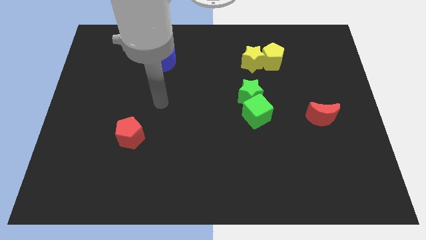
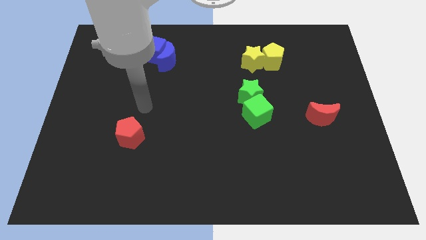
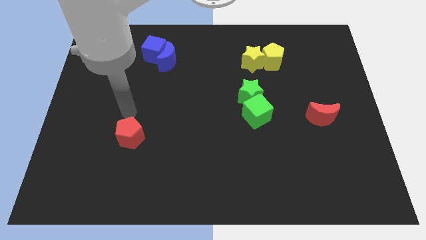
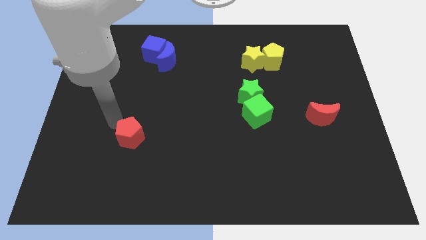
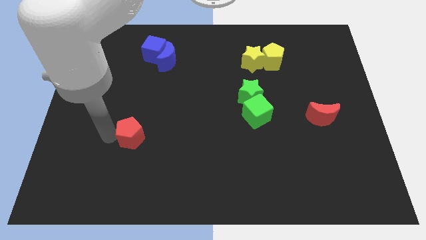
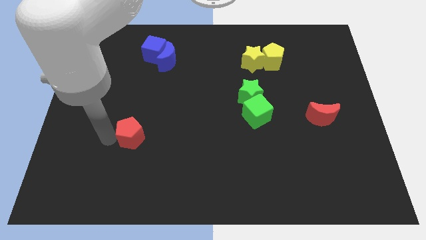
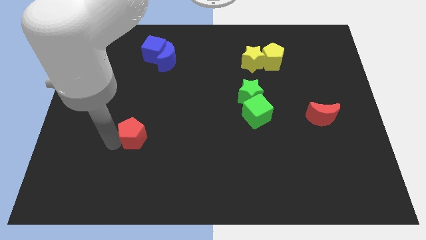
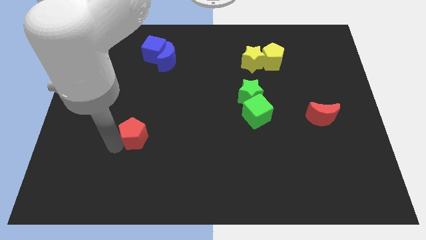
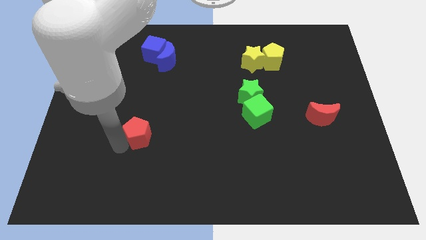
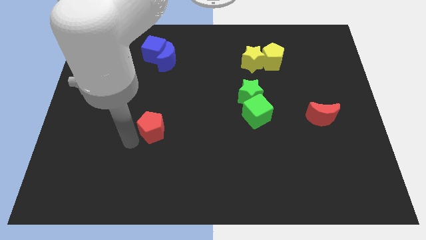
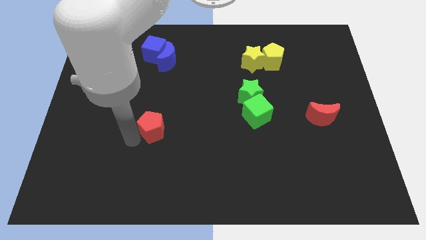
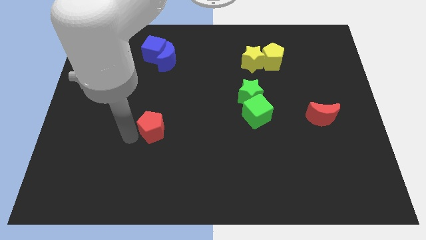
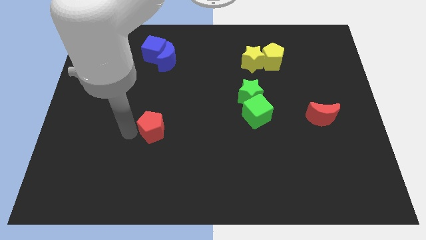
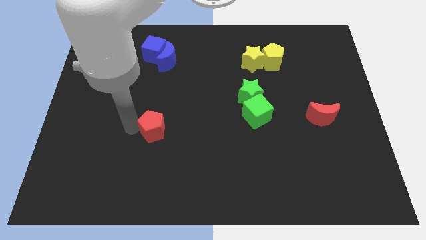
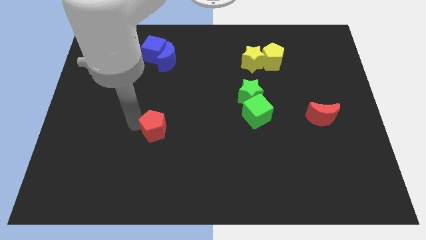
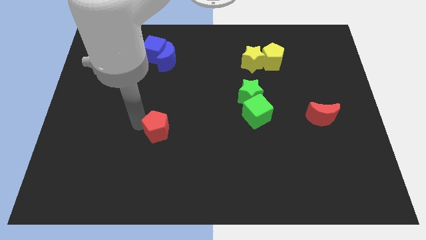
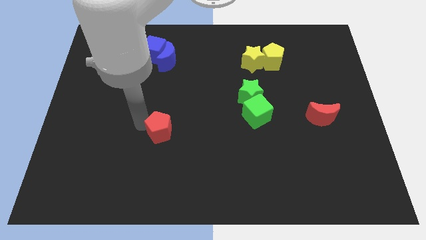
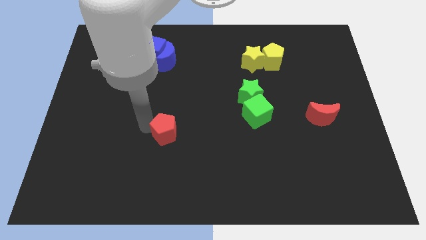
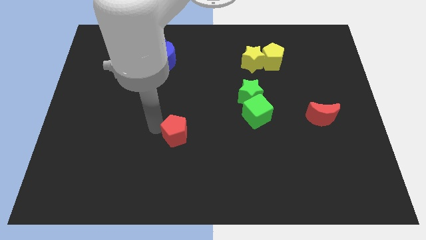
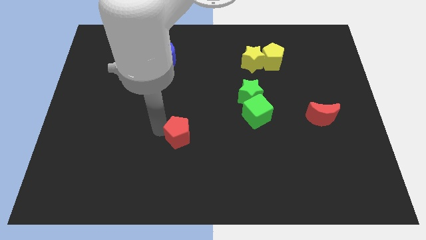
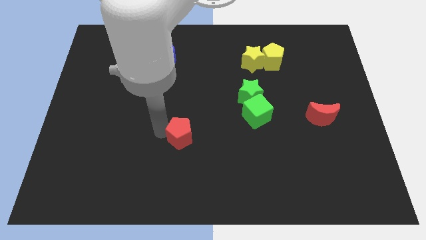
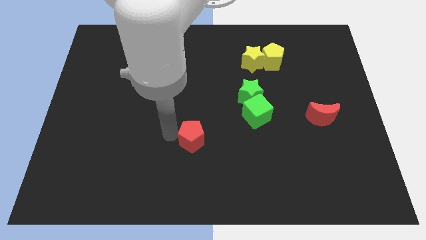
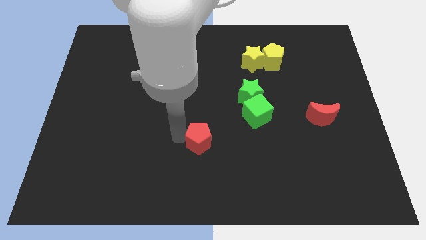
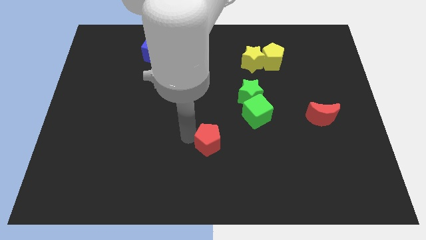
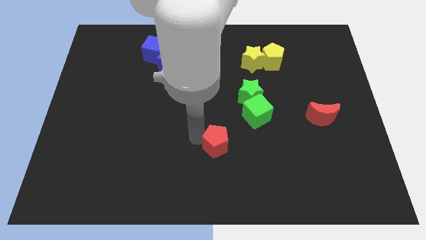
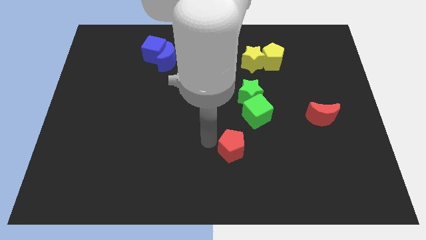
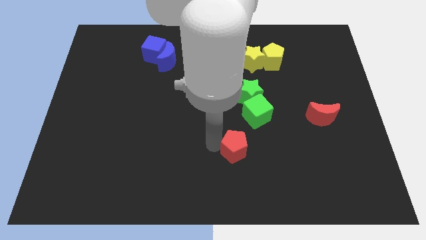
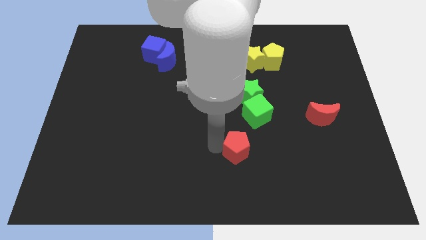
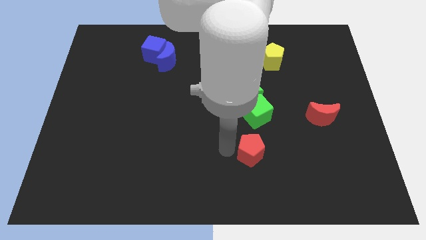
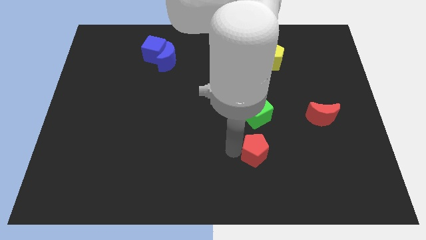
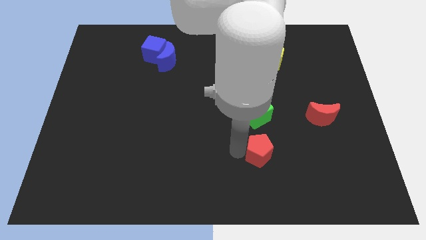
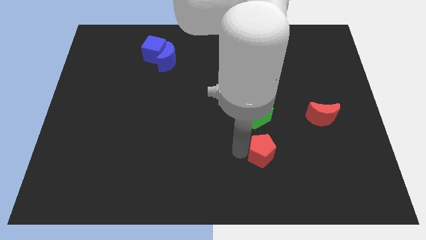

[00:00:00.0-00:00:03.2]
move the red pentagon to the bottom of the green cube

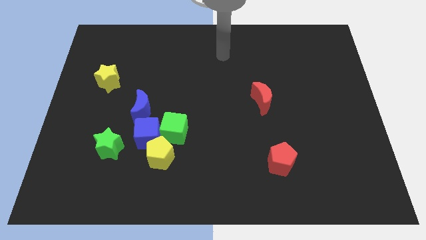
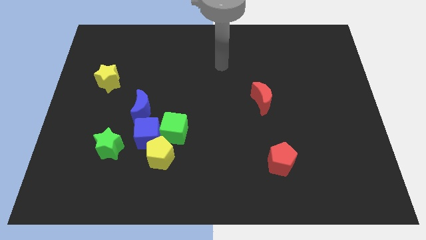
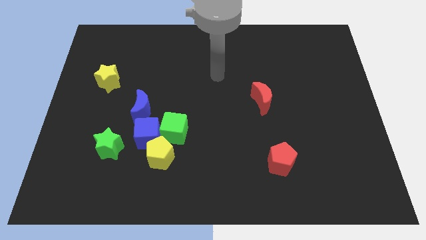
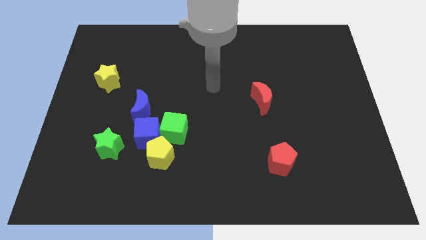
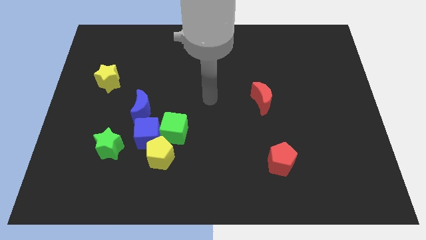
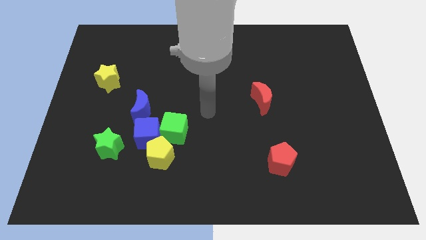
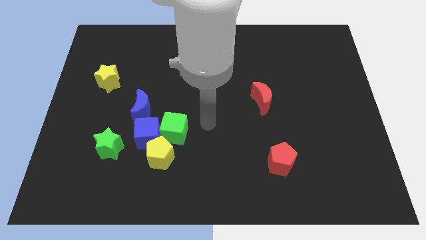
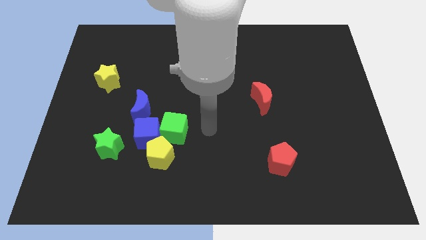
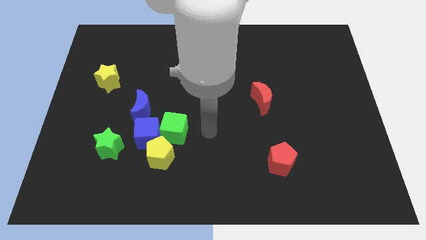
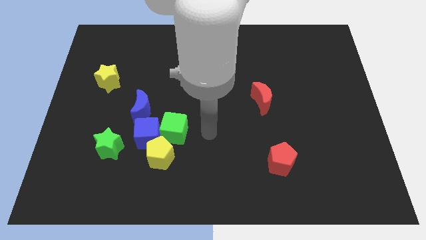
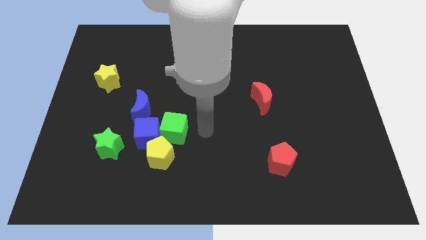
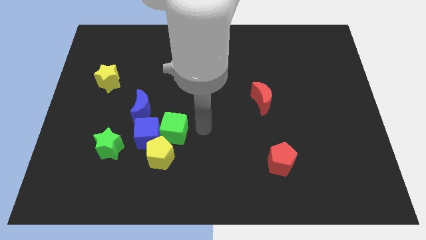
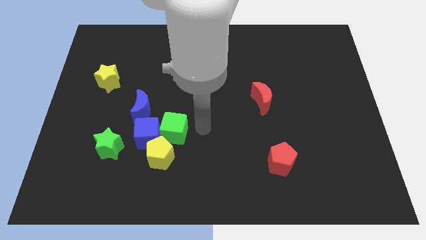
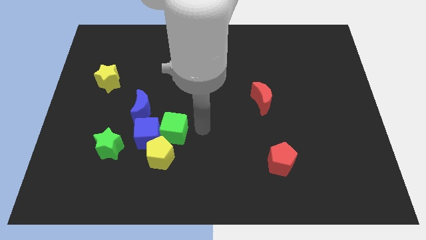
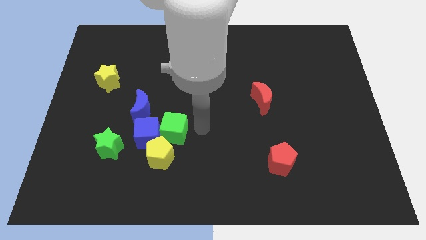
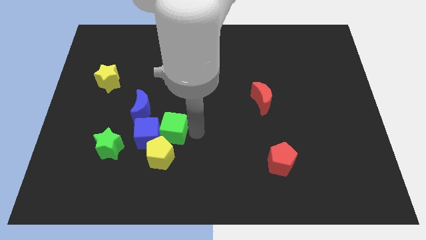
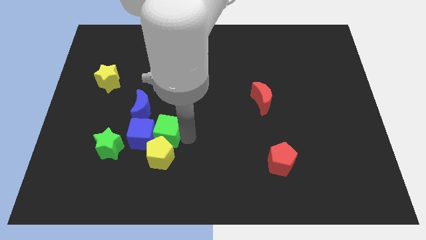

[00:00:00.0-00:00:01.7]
move your arm towards green cube

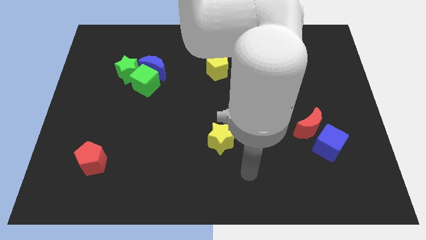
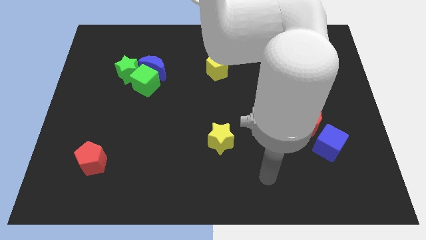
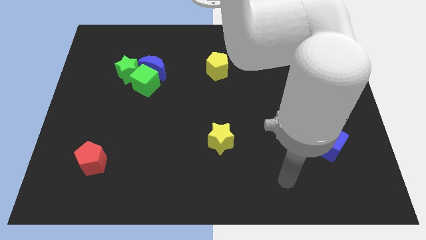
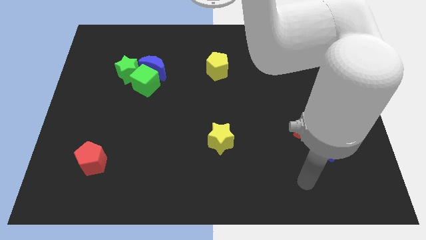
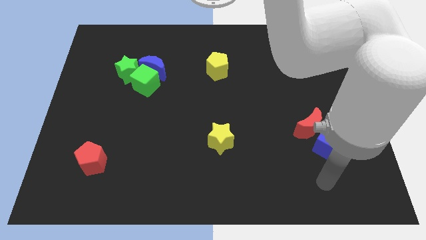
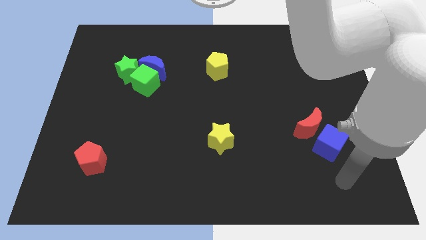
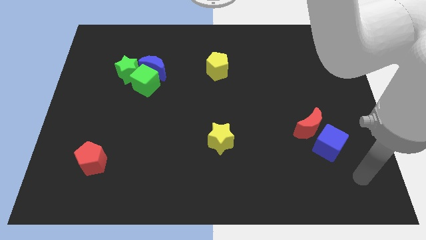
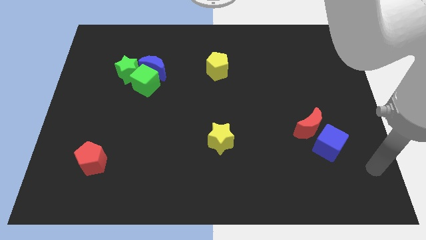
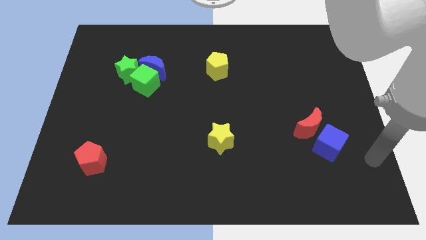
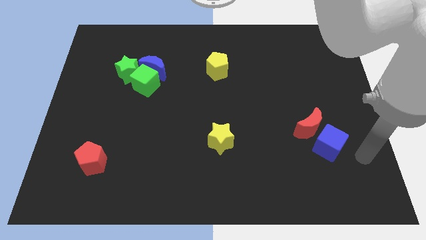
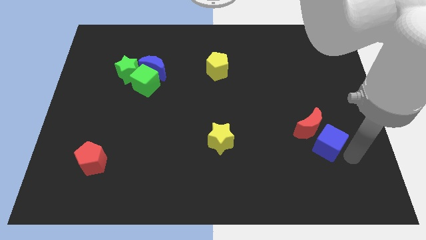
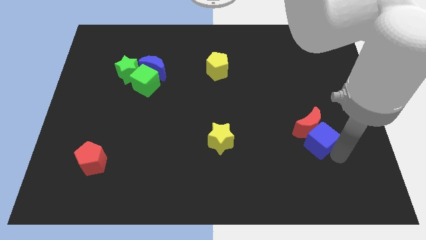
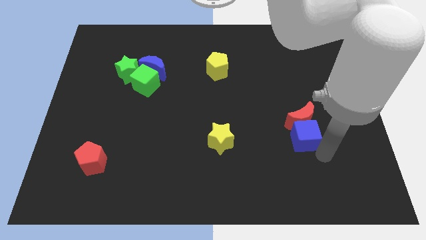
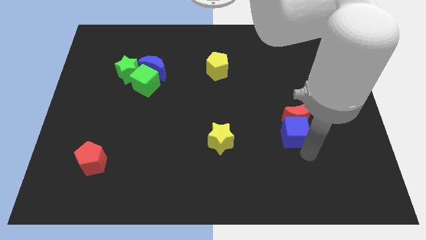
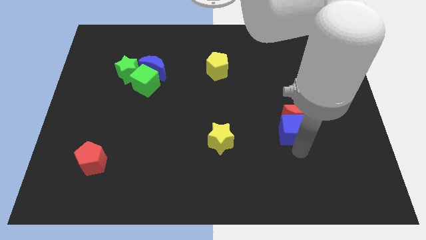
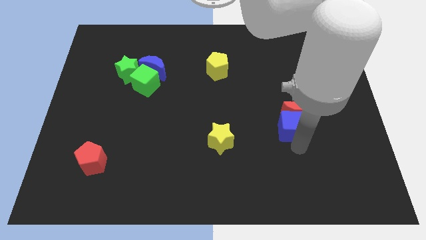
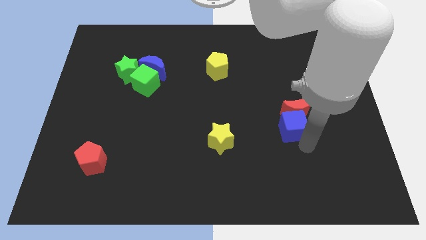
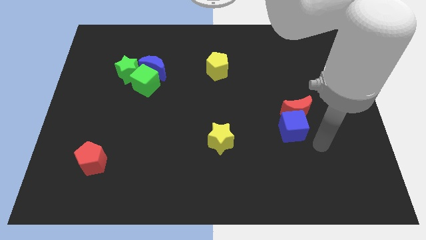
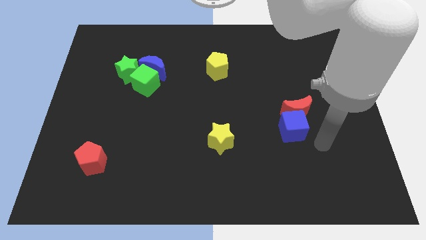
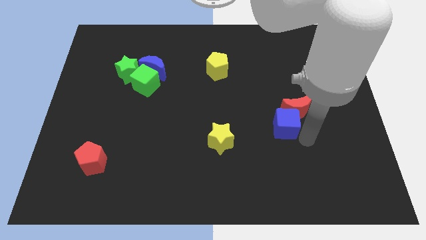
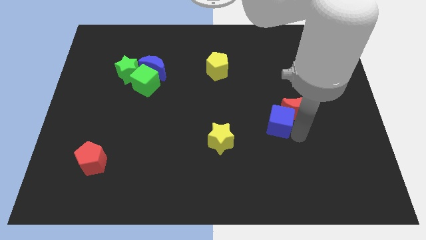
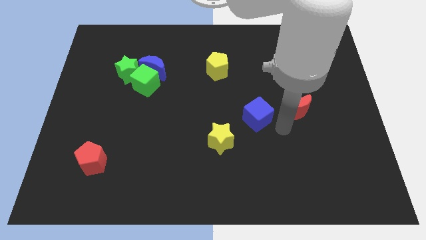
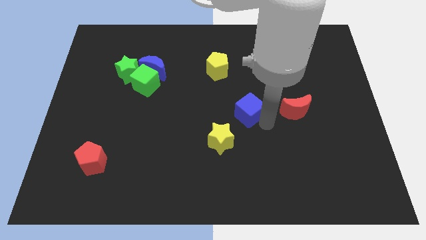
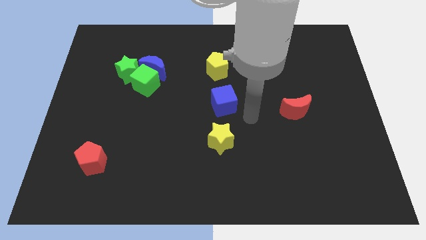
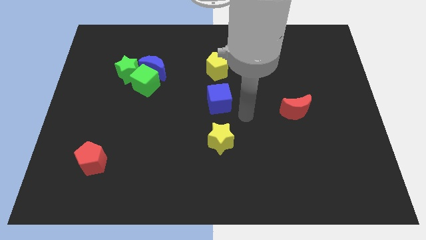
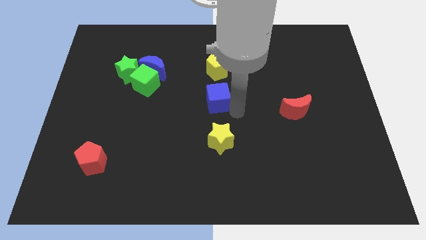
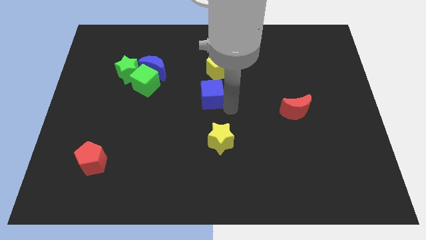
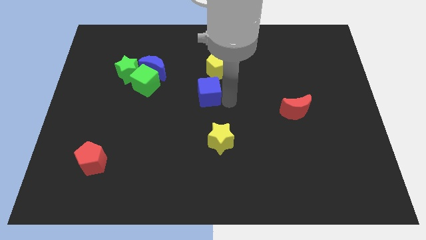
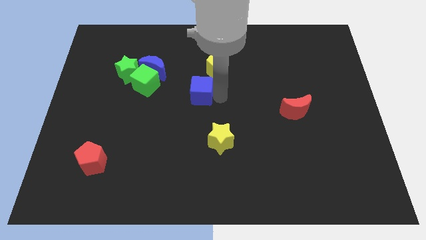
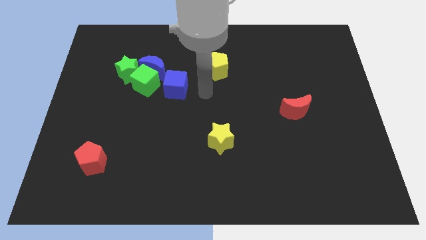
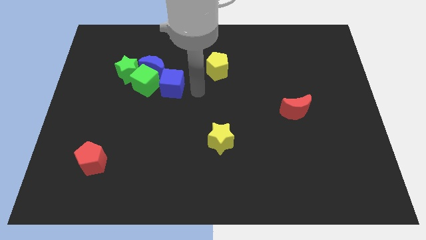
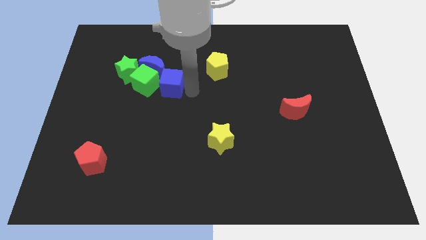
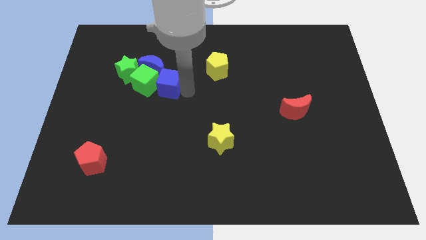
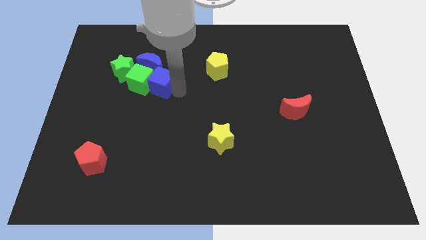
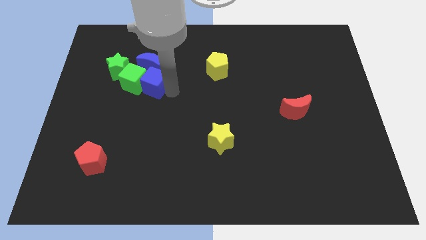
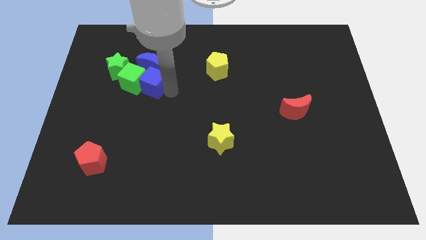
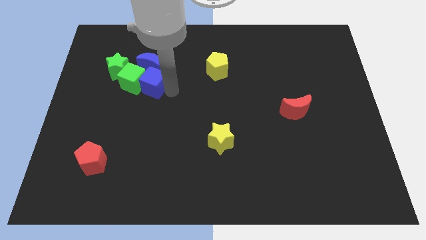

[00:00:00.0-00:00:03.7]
push the blue cube beside the green cube and bottom right side of the blue moon

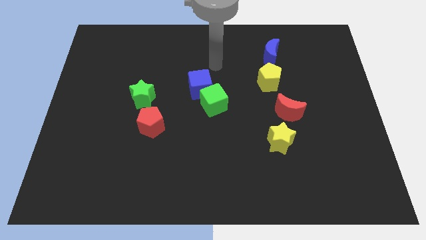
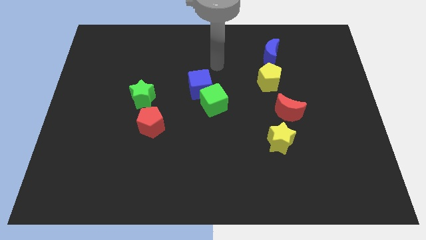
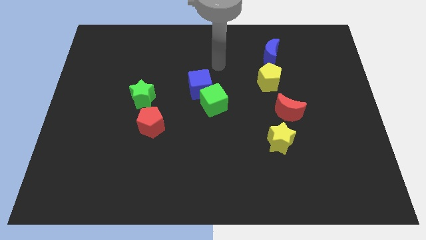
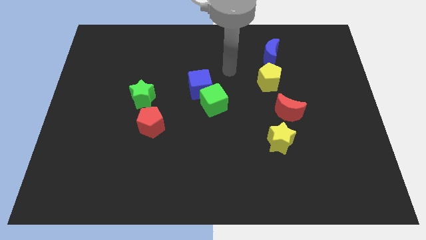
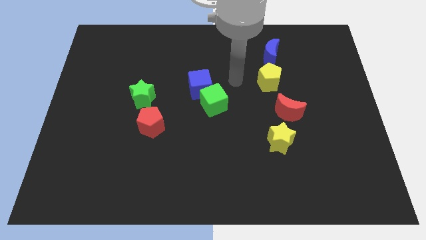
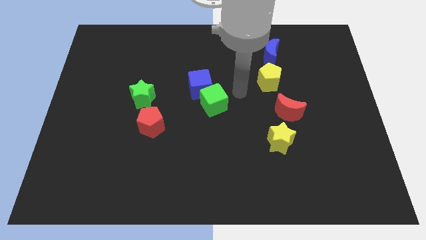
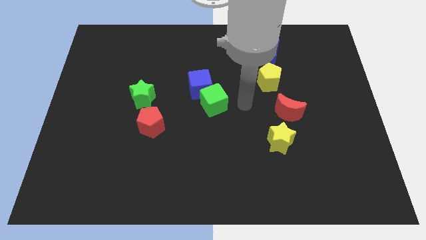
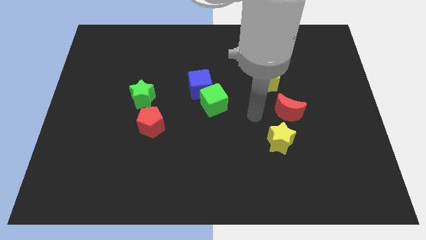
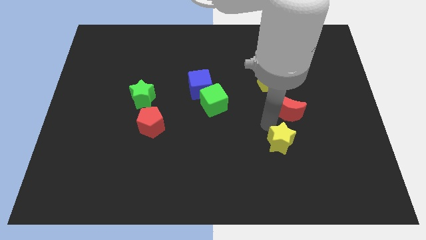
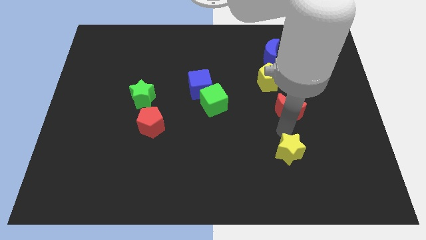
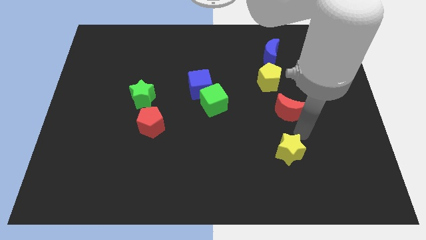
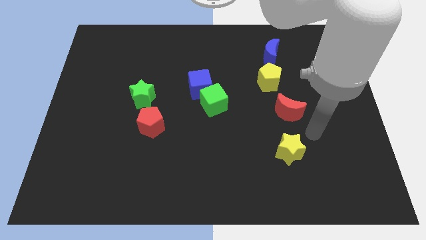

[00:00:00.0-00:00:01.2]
push yellow star slightly down
